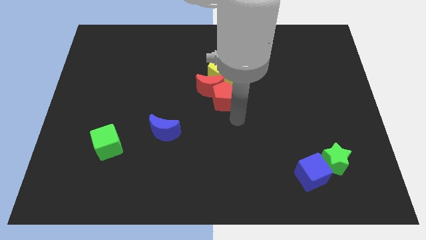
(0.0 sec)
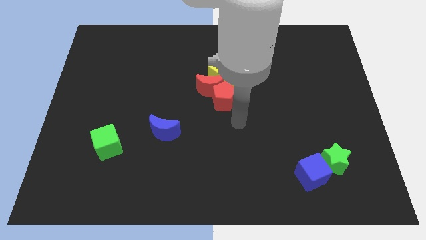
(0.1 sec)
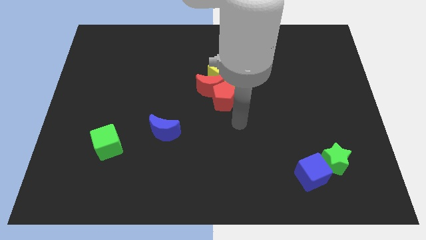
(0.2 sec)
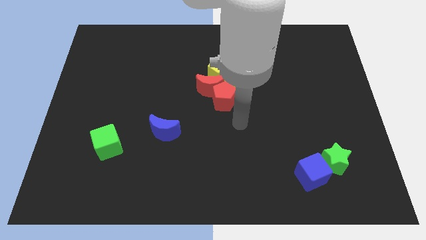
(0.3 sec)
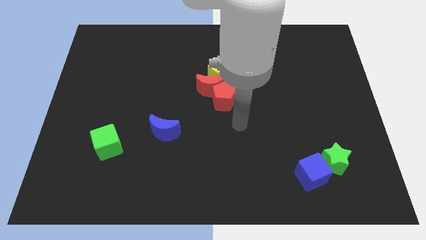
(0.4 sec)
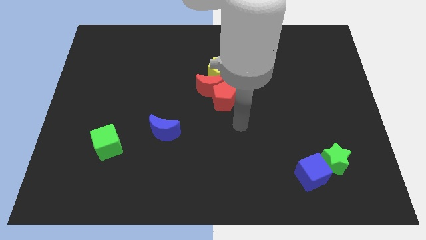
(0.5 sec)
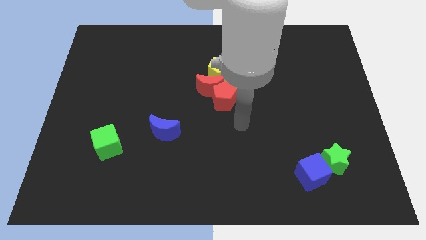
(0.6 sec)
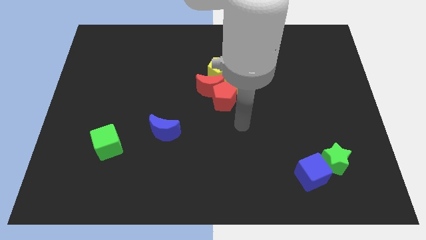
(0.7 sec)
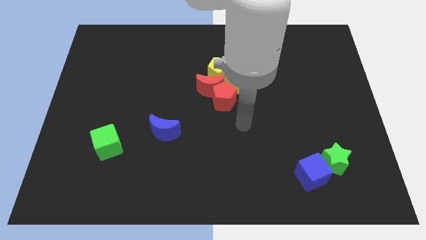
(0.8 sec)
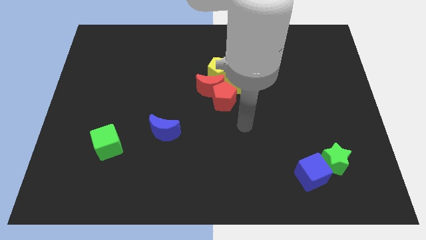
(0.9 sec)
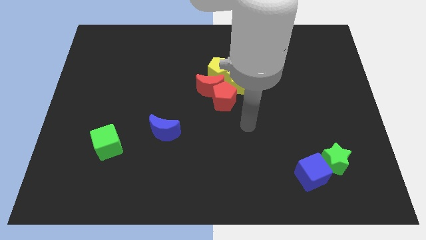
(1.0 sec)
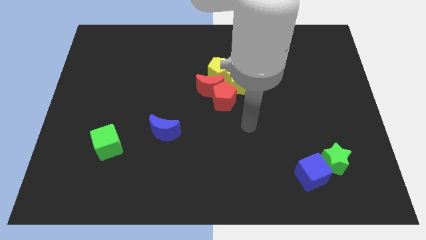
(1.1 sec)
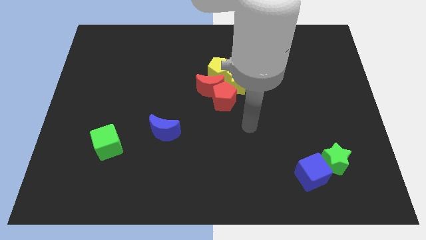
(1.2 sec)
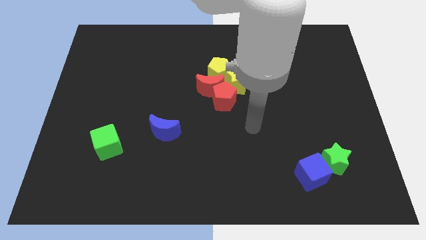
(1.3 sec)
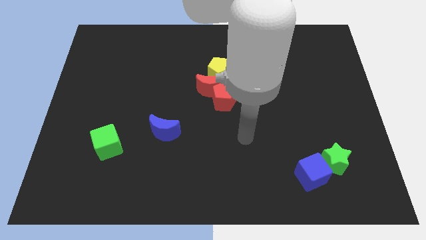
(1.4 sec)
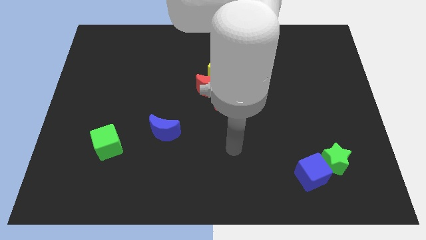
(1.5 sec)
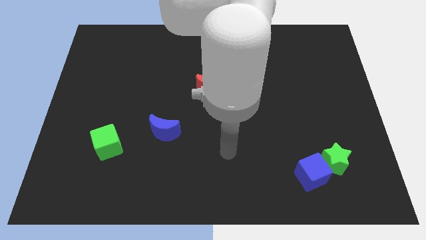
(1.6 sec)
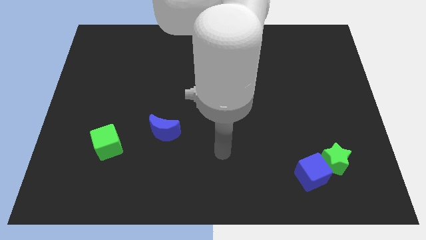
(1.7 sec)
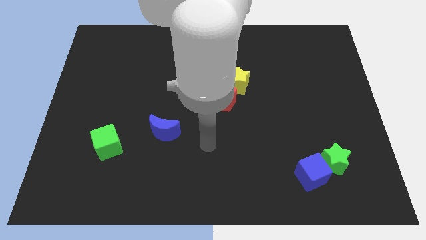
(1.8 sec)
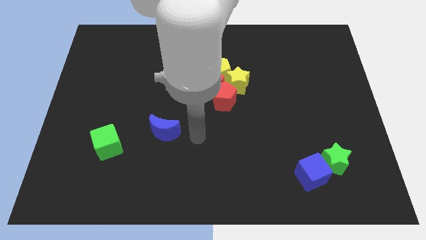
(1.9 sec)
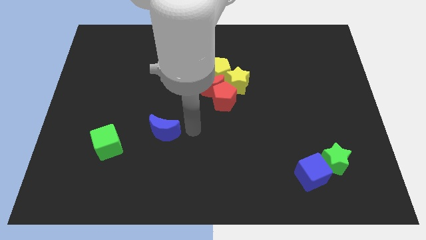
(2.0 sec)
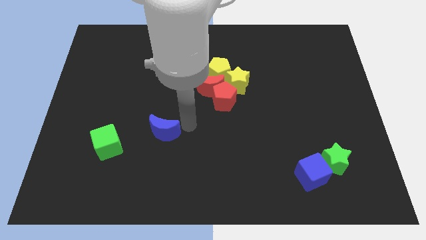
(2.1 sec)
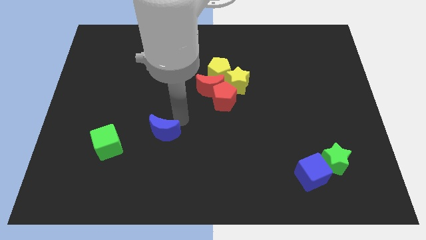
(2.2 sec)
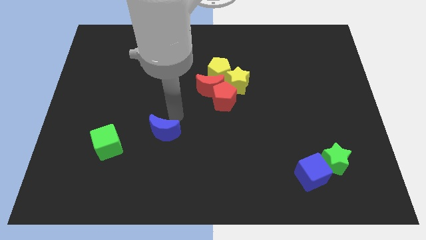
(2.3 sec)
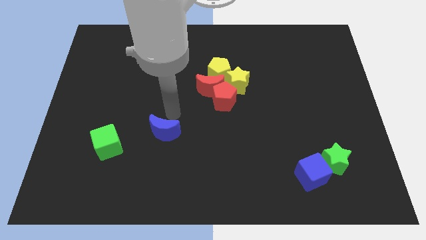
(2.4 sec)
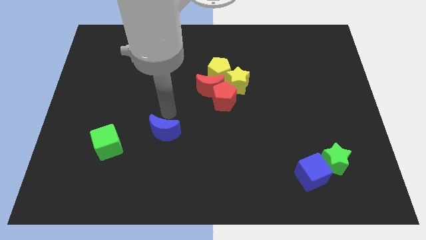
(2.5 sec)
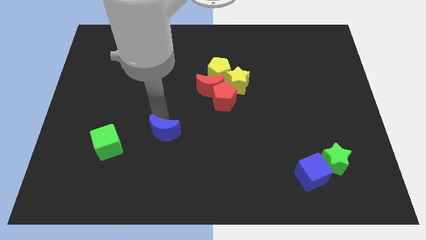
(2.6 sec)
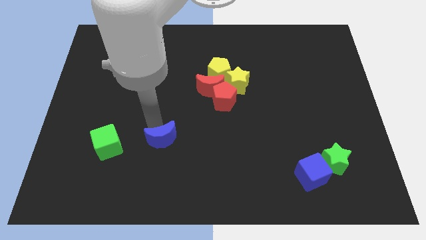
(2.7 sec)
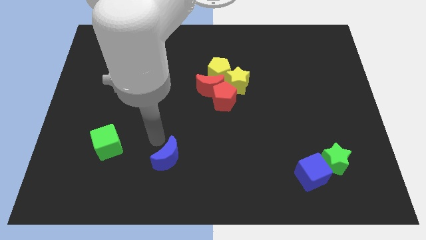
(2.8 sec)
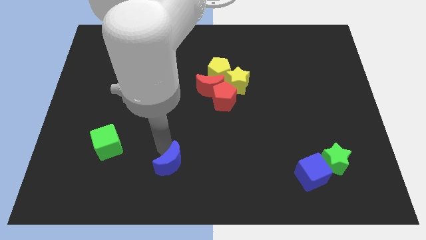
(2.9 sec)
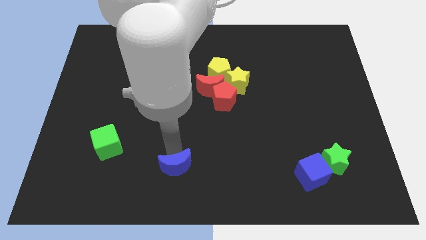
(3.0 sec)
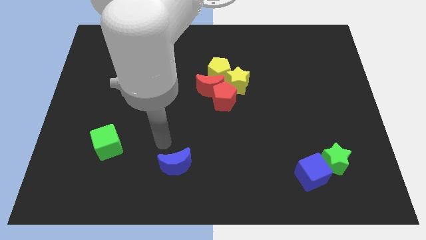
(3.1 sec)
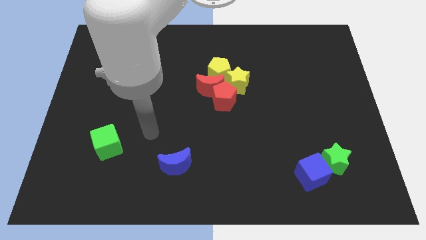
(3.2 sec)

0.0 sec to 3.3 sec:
move the blue moon slightly down

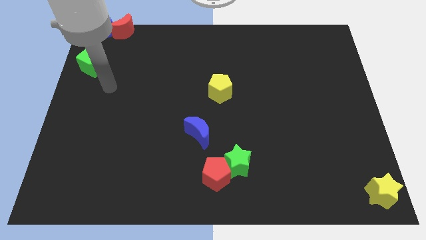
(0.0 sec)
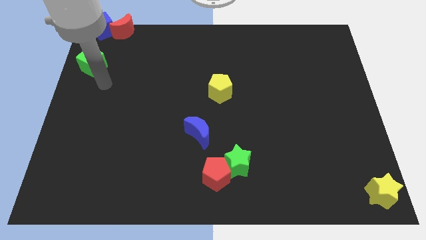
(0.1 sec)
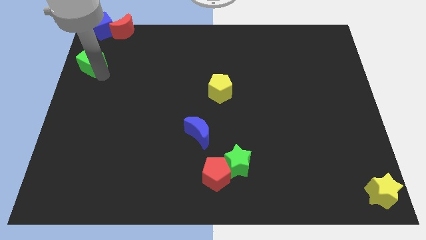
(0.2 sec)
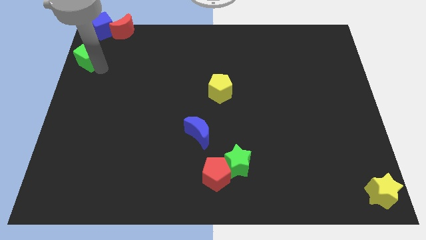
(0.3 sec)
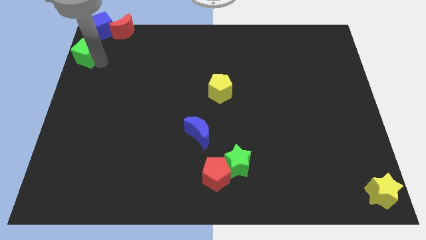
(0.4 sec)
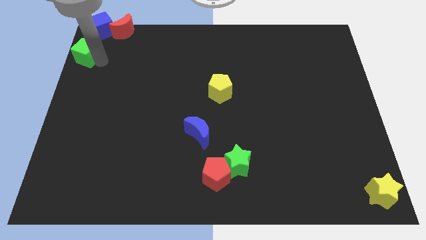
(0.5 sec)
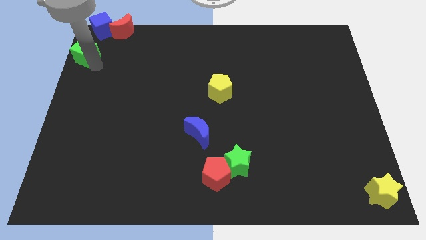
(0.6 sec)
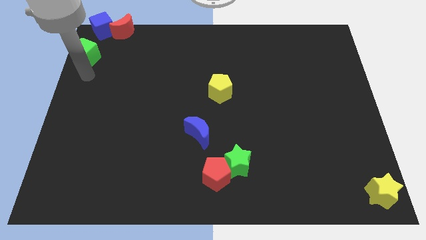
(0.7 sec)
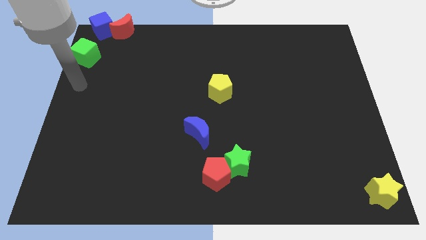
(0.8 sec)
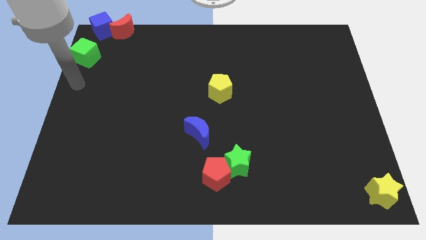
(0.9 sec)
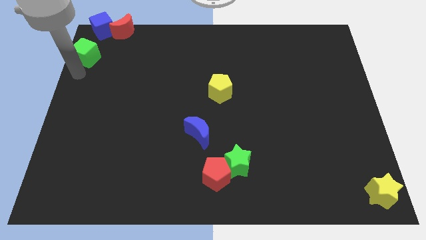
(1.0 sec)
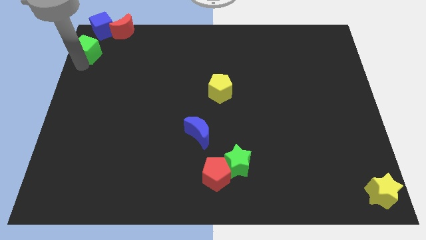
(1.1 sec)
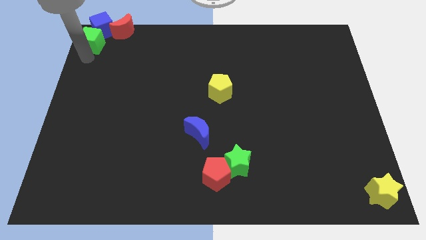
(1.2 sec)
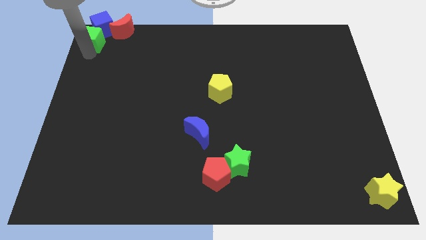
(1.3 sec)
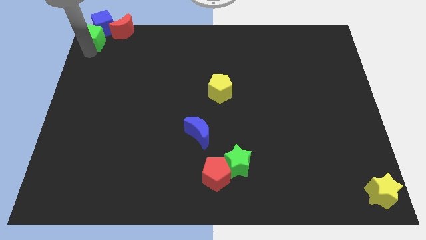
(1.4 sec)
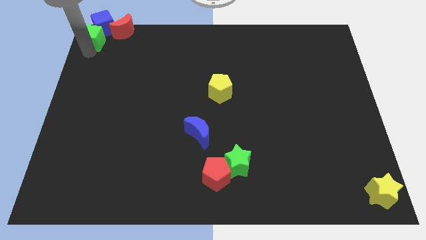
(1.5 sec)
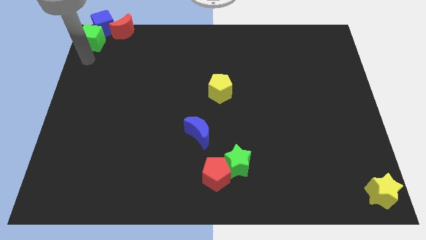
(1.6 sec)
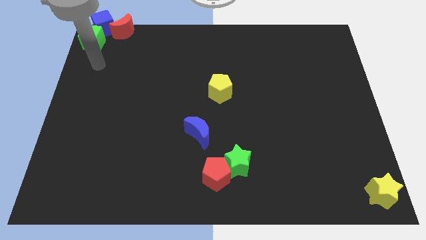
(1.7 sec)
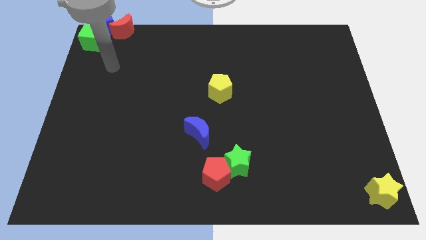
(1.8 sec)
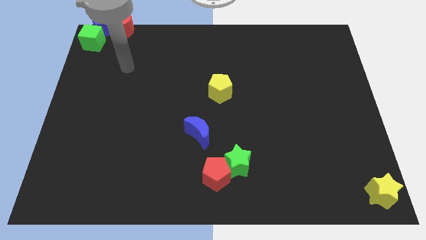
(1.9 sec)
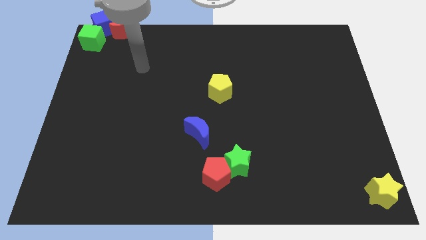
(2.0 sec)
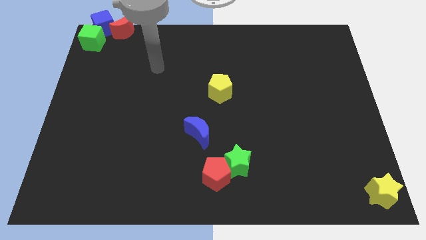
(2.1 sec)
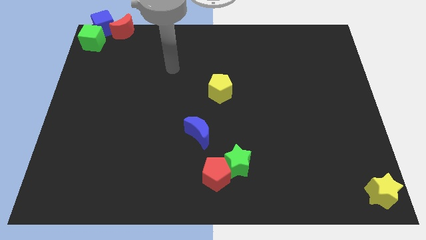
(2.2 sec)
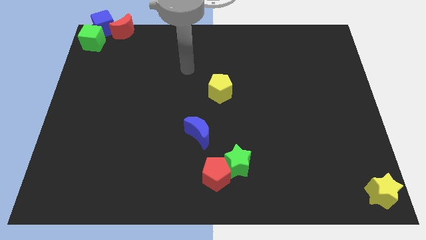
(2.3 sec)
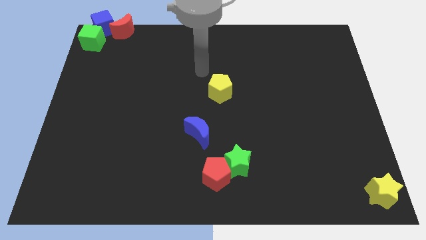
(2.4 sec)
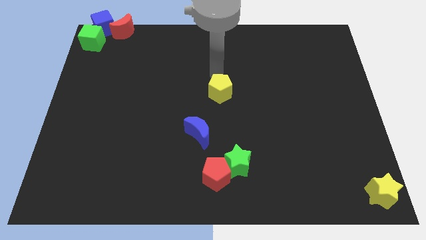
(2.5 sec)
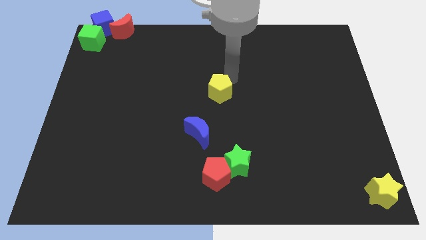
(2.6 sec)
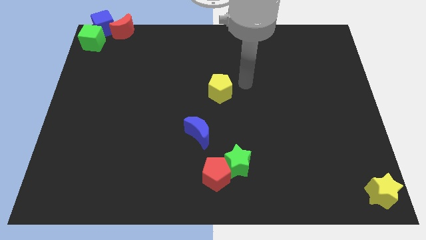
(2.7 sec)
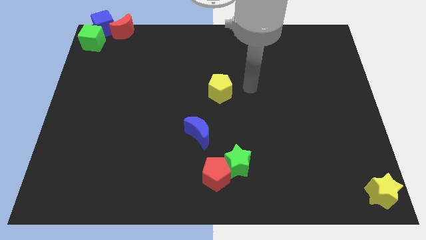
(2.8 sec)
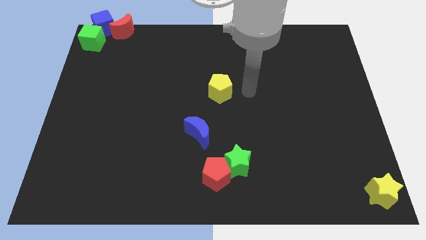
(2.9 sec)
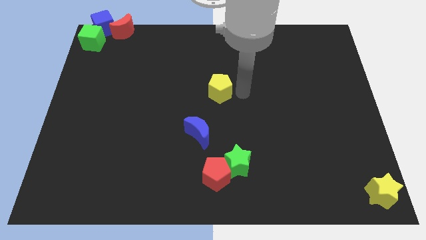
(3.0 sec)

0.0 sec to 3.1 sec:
place the arm right to the yellow pentagon

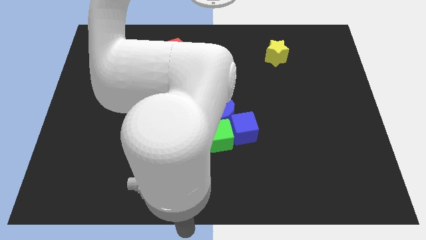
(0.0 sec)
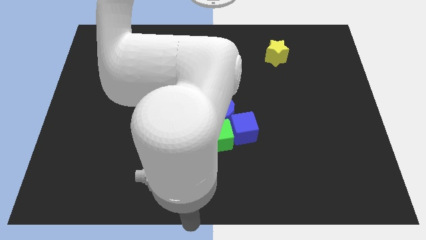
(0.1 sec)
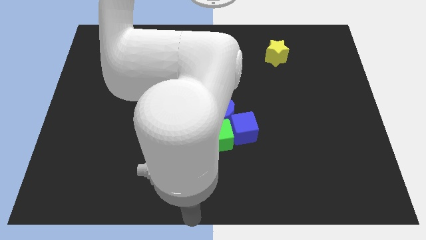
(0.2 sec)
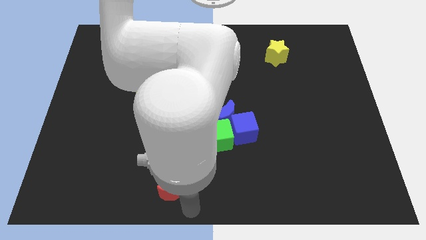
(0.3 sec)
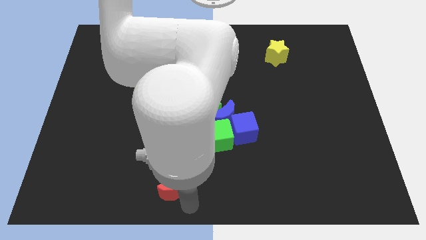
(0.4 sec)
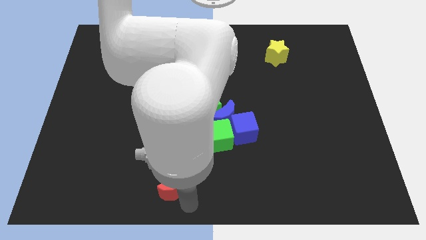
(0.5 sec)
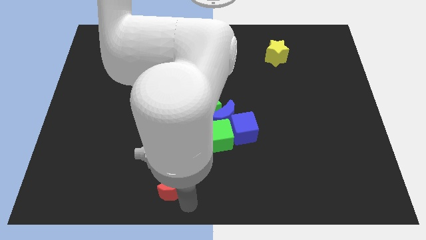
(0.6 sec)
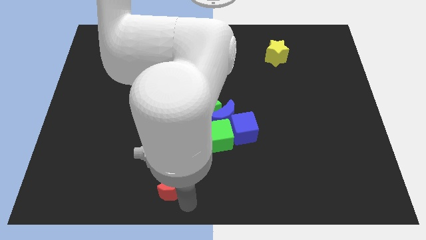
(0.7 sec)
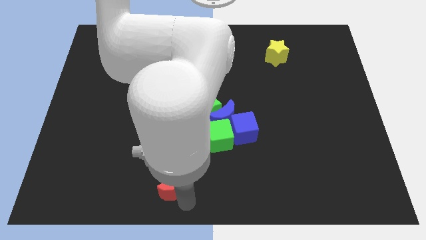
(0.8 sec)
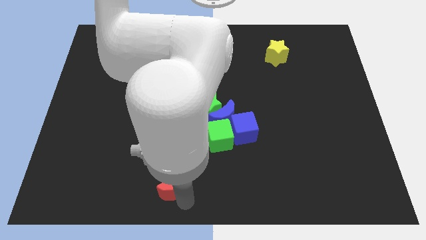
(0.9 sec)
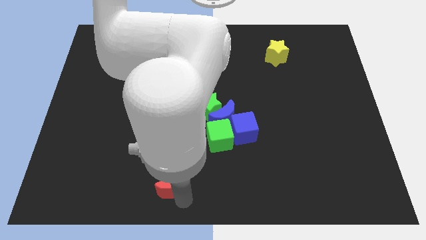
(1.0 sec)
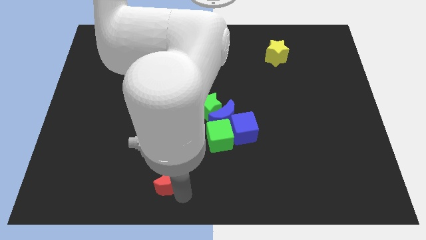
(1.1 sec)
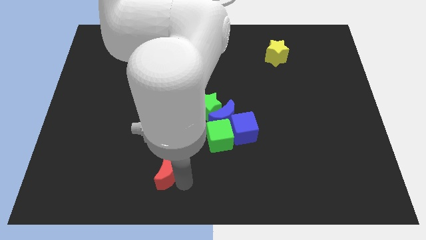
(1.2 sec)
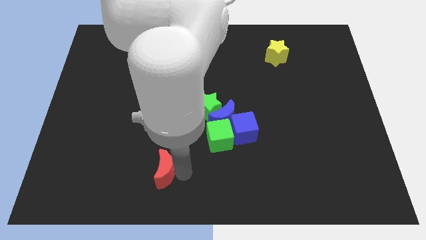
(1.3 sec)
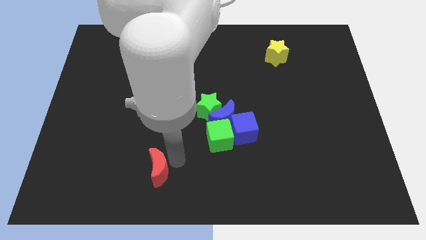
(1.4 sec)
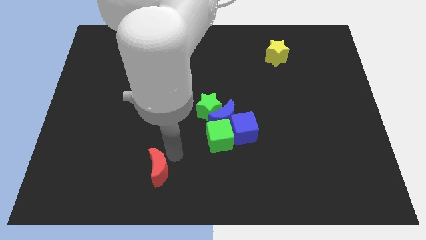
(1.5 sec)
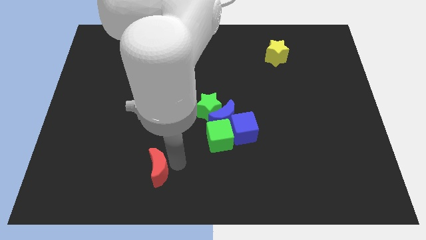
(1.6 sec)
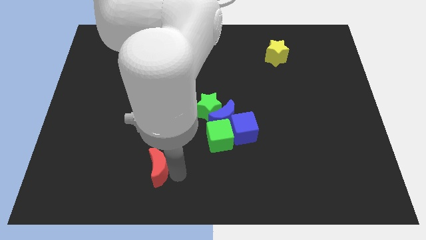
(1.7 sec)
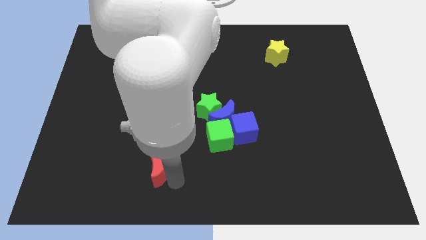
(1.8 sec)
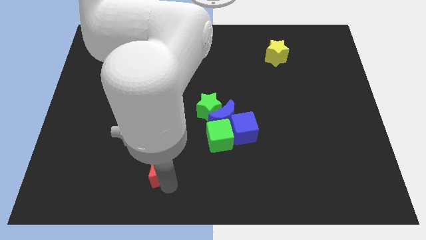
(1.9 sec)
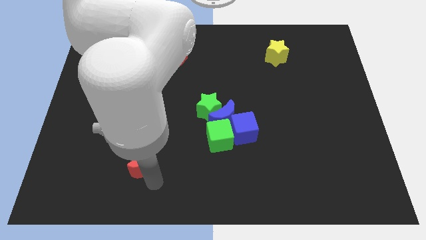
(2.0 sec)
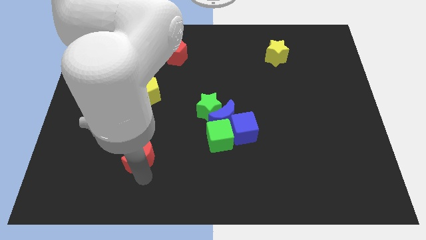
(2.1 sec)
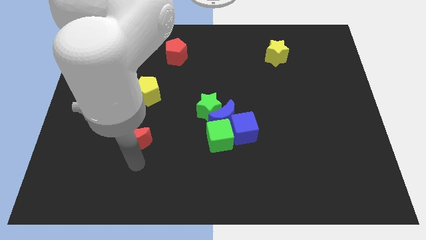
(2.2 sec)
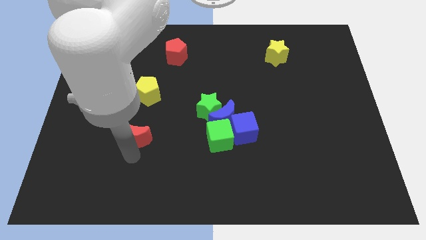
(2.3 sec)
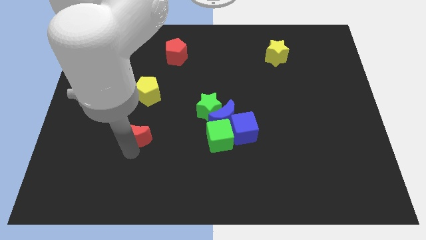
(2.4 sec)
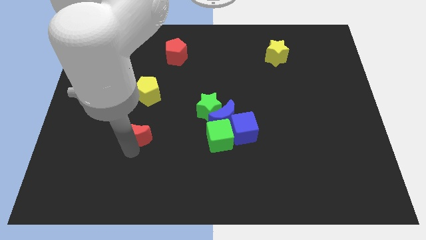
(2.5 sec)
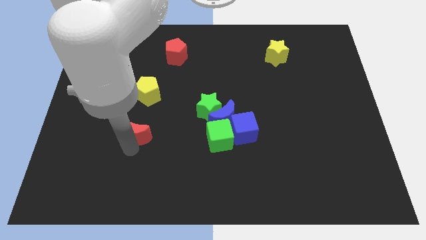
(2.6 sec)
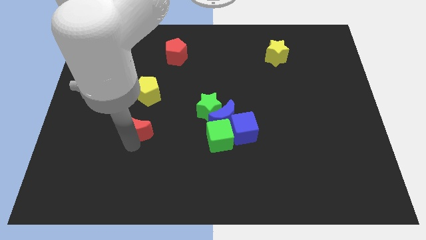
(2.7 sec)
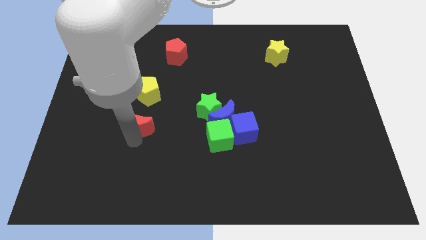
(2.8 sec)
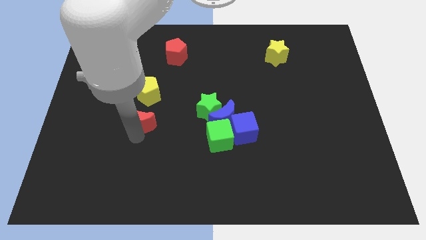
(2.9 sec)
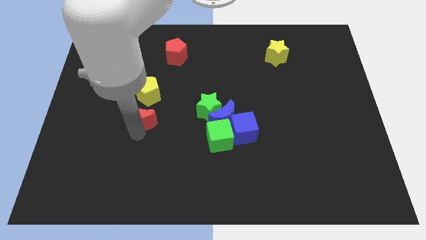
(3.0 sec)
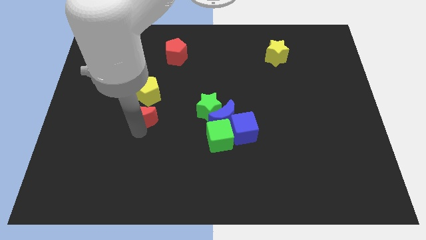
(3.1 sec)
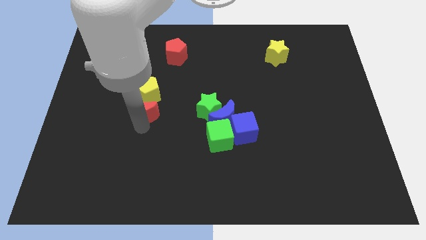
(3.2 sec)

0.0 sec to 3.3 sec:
place the red moon left to the green star
